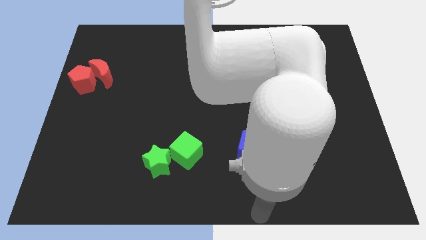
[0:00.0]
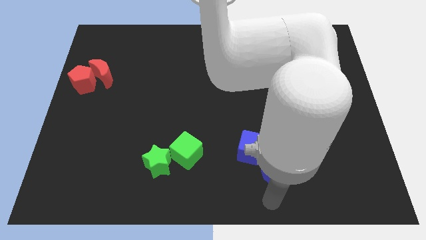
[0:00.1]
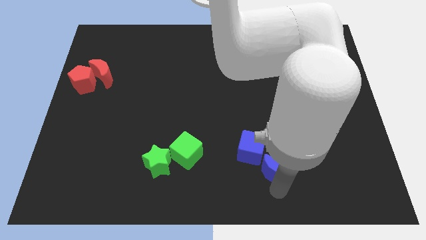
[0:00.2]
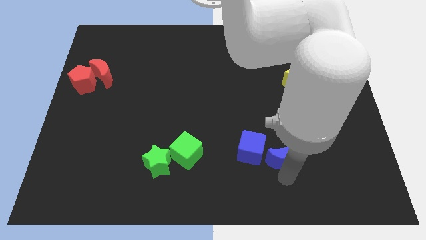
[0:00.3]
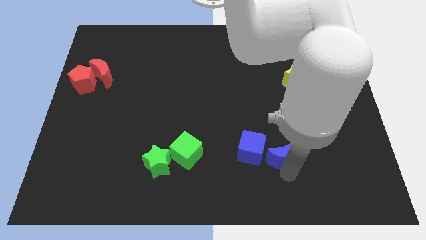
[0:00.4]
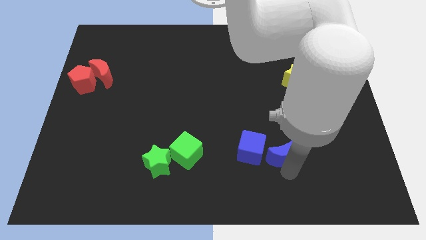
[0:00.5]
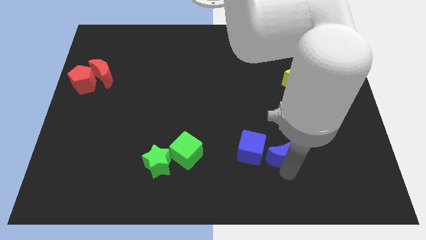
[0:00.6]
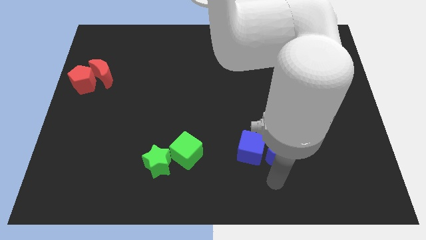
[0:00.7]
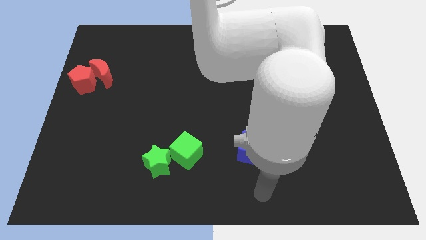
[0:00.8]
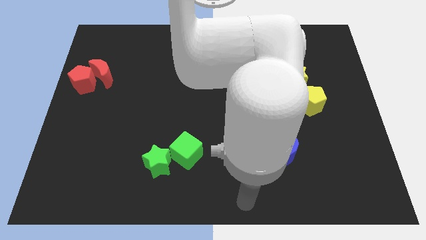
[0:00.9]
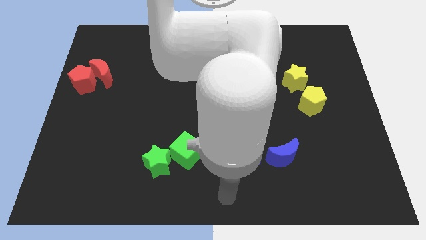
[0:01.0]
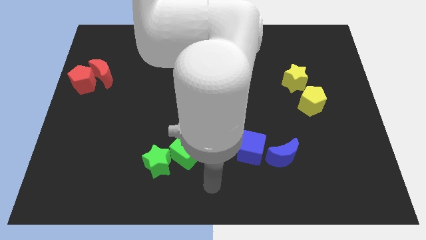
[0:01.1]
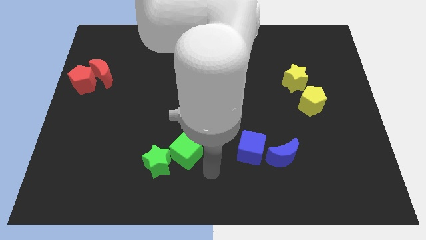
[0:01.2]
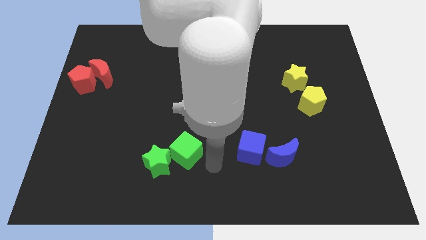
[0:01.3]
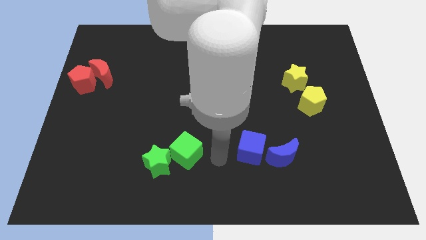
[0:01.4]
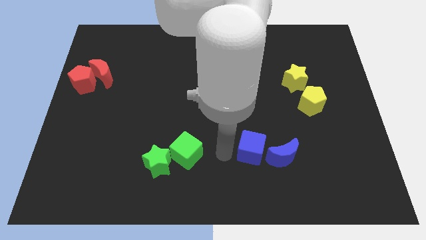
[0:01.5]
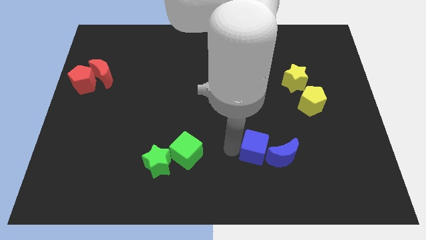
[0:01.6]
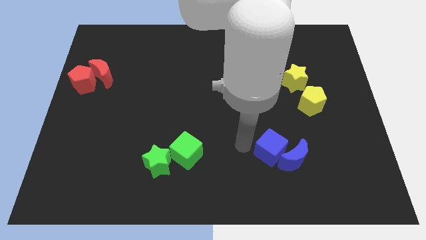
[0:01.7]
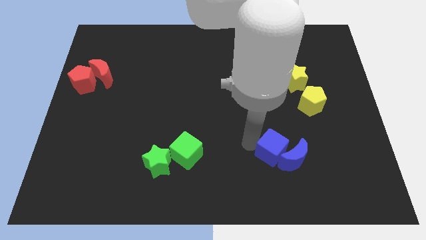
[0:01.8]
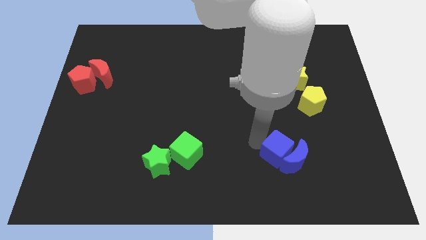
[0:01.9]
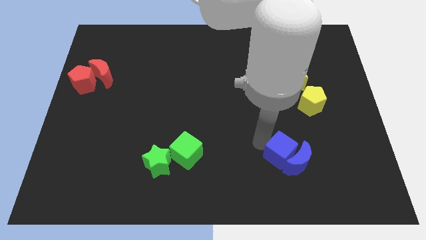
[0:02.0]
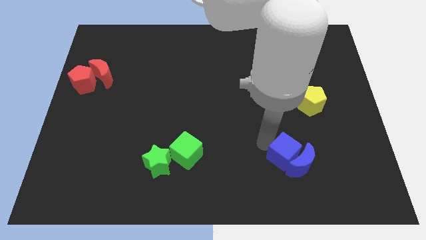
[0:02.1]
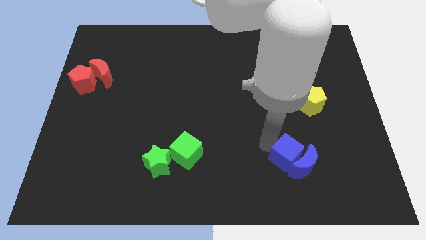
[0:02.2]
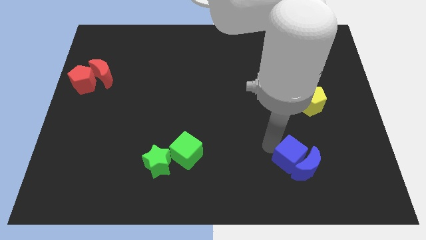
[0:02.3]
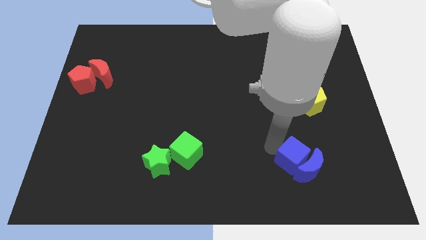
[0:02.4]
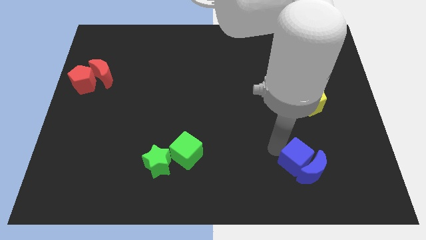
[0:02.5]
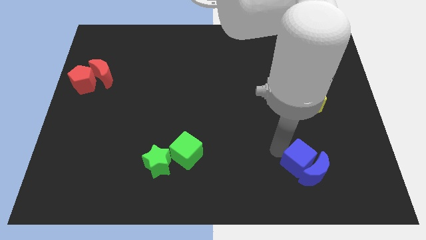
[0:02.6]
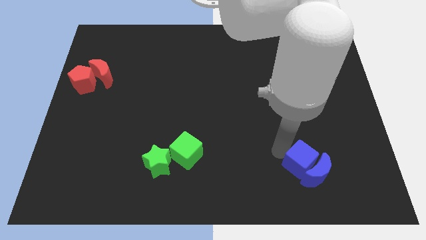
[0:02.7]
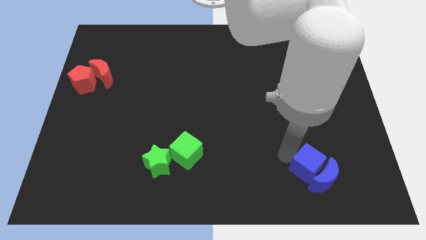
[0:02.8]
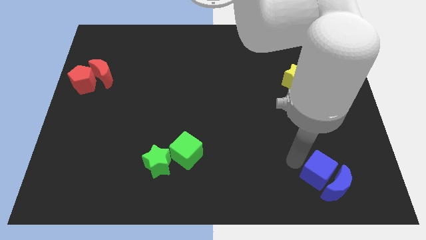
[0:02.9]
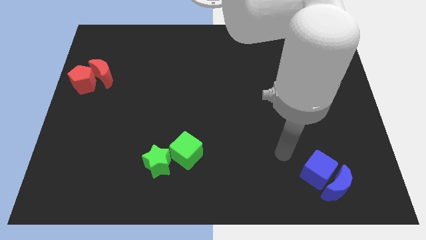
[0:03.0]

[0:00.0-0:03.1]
move the blue blocks towards the bottom right corner of the board

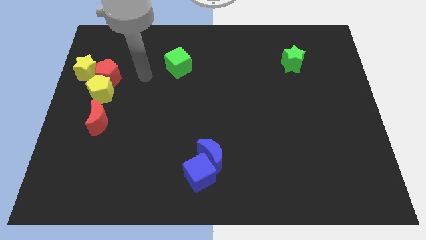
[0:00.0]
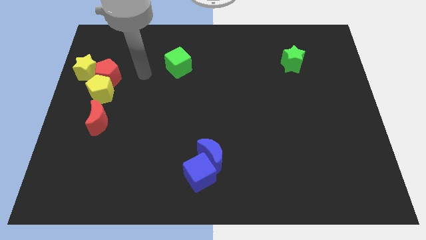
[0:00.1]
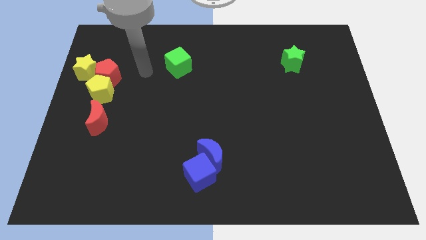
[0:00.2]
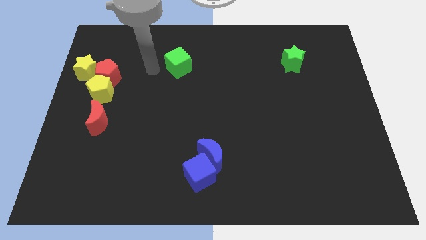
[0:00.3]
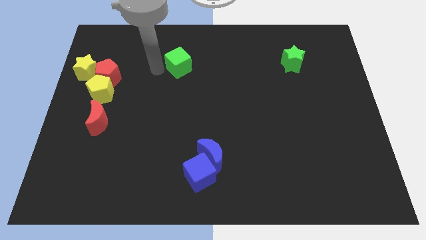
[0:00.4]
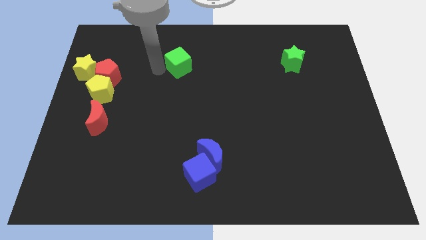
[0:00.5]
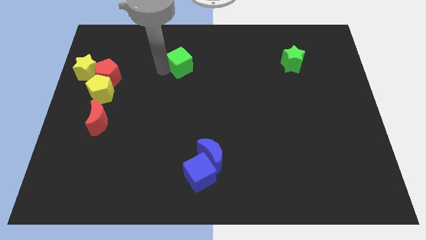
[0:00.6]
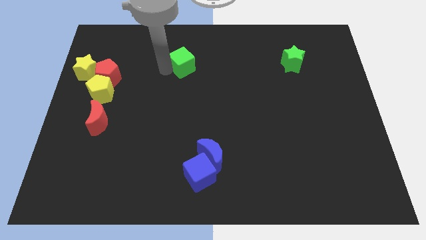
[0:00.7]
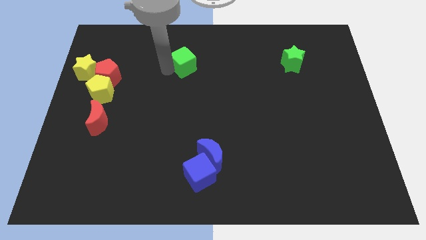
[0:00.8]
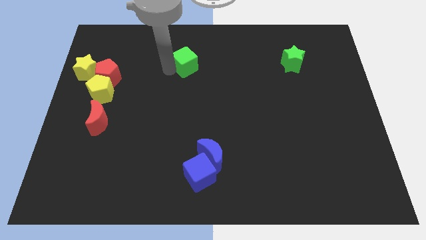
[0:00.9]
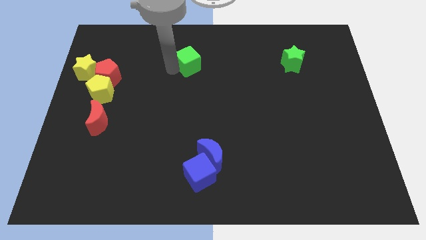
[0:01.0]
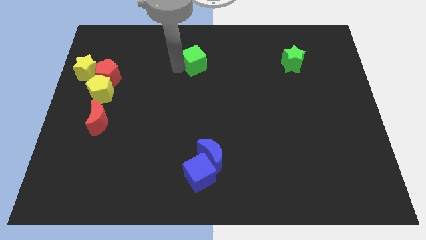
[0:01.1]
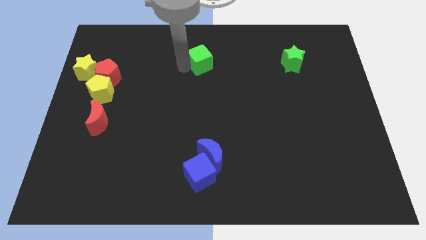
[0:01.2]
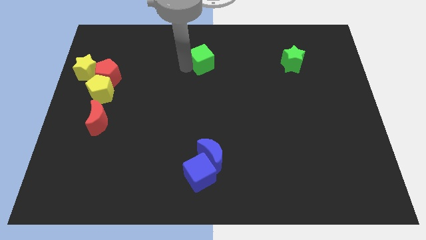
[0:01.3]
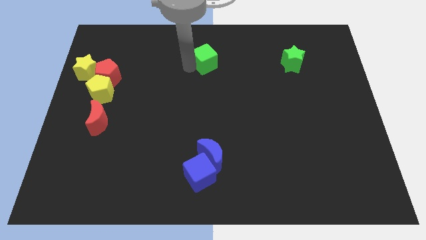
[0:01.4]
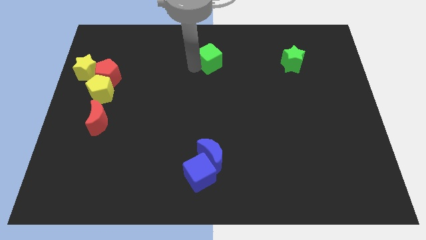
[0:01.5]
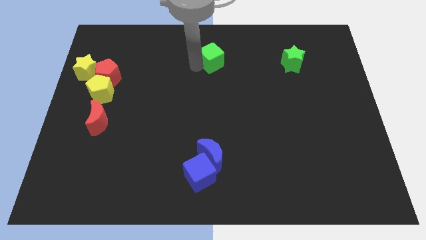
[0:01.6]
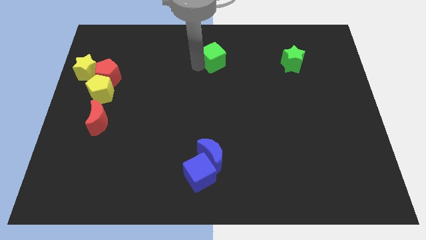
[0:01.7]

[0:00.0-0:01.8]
push the green cube at the top center of the board

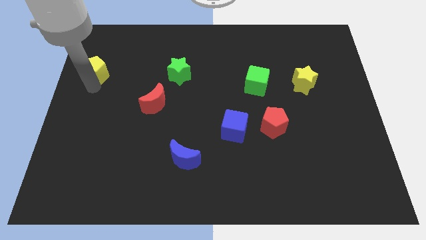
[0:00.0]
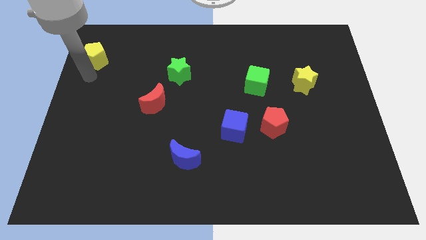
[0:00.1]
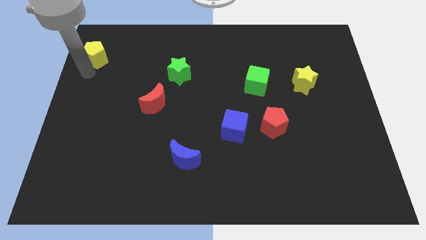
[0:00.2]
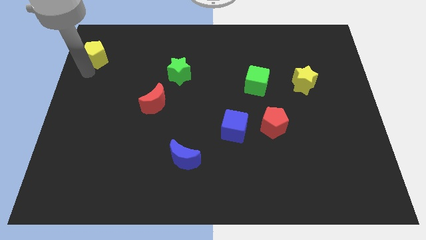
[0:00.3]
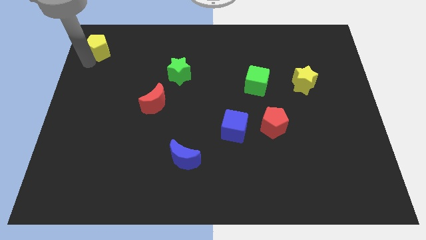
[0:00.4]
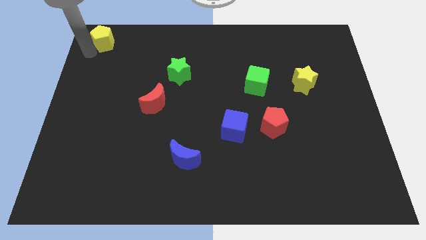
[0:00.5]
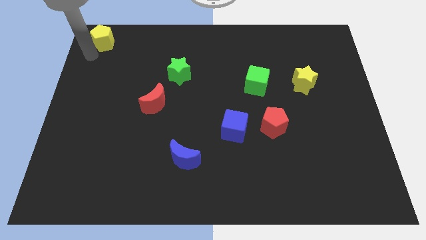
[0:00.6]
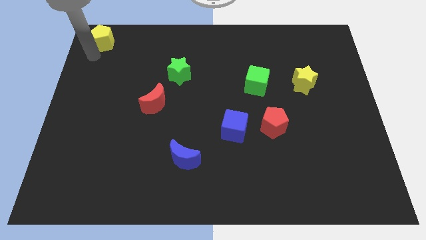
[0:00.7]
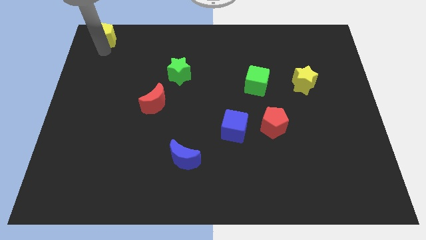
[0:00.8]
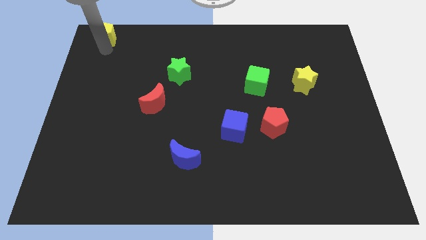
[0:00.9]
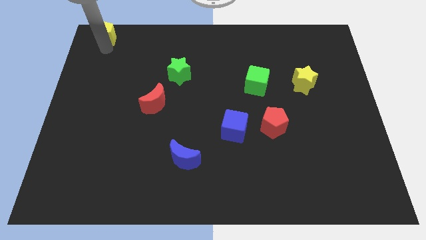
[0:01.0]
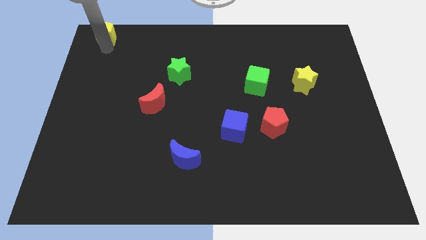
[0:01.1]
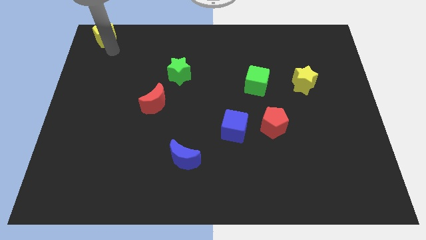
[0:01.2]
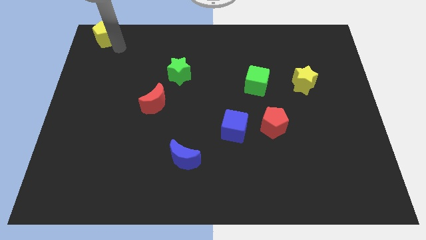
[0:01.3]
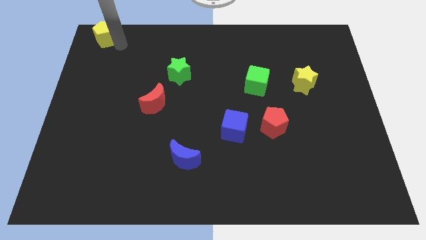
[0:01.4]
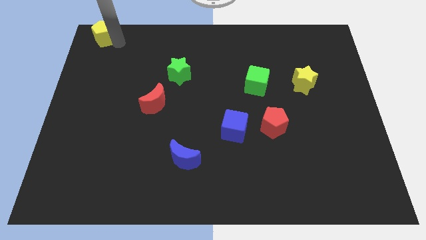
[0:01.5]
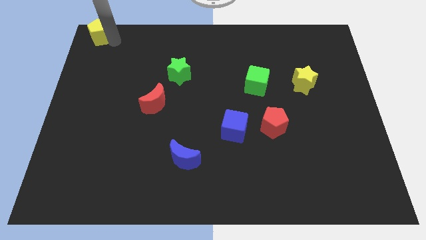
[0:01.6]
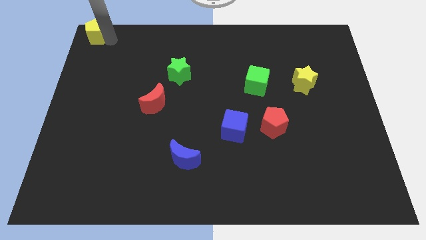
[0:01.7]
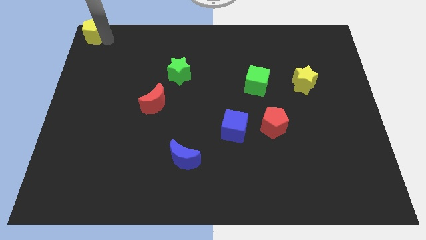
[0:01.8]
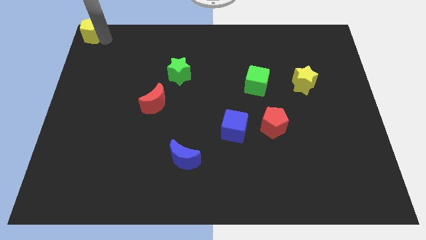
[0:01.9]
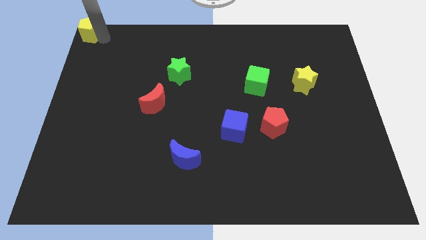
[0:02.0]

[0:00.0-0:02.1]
push the yellow pentagon to the top left corner of the board

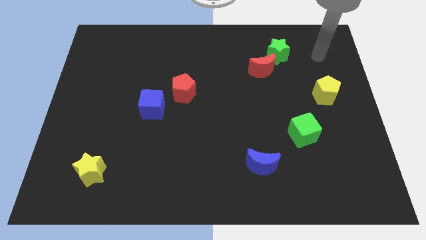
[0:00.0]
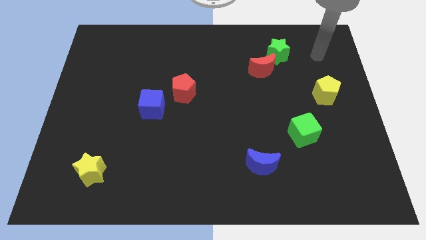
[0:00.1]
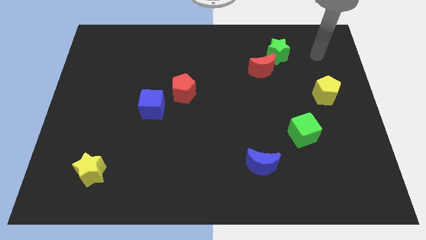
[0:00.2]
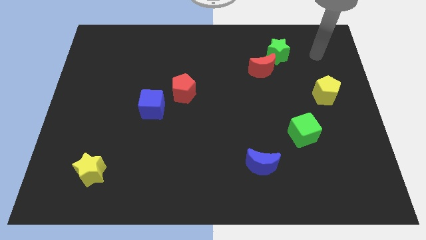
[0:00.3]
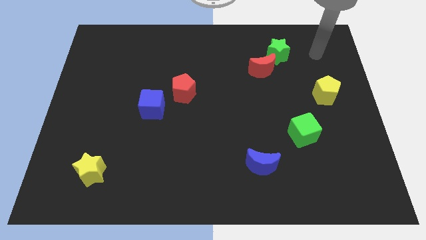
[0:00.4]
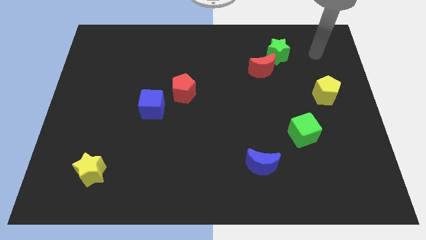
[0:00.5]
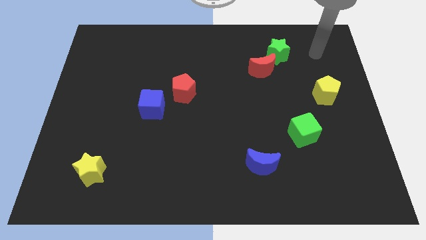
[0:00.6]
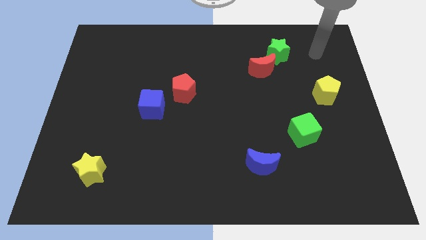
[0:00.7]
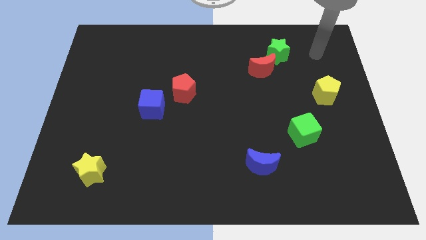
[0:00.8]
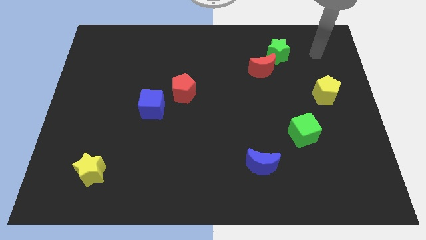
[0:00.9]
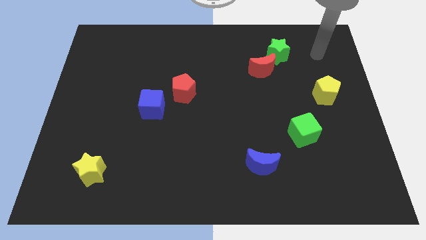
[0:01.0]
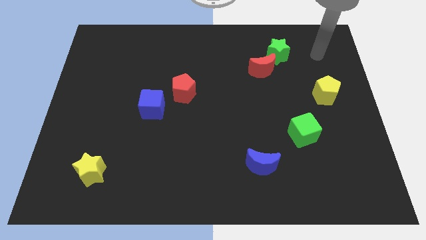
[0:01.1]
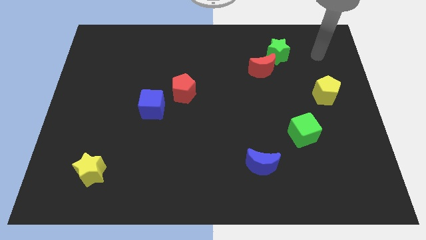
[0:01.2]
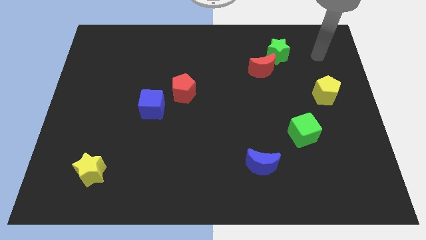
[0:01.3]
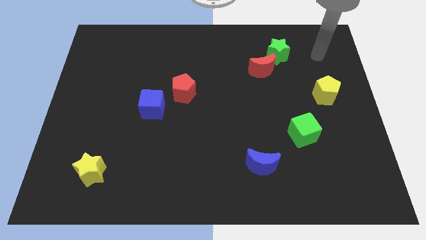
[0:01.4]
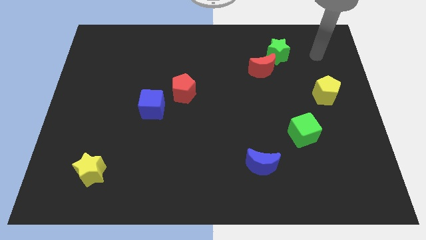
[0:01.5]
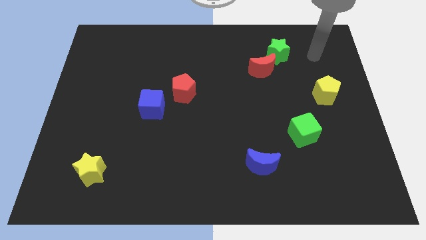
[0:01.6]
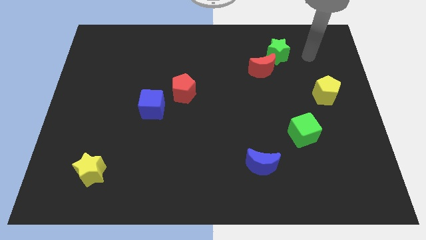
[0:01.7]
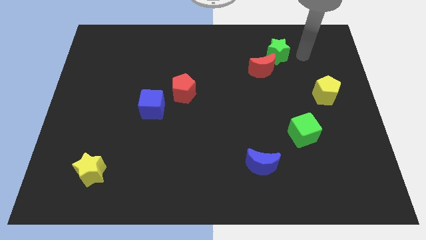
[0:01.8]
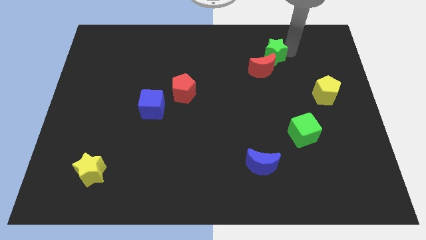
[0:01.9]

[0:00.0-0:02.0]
move arm near green star

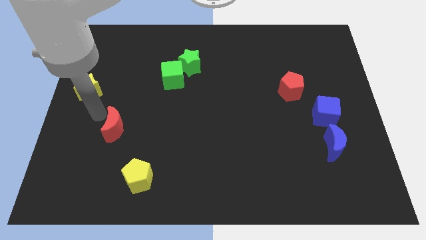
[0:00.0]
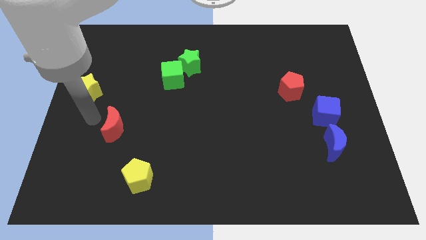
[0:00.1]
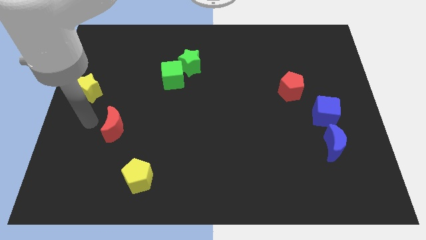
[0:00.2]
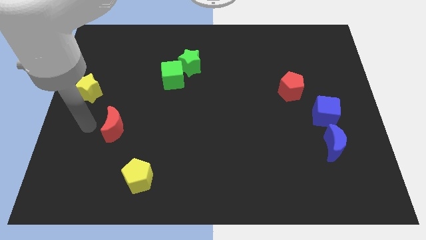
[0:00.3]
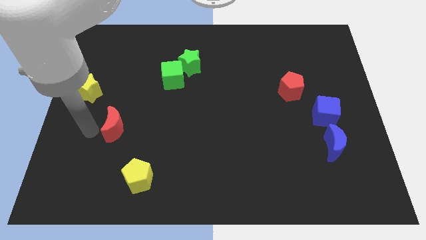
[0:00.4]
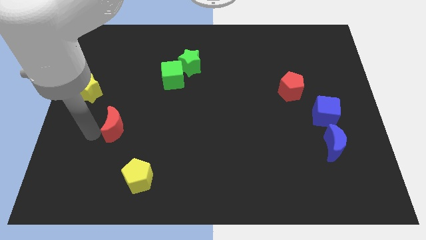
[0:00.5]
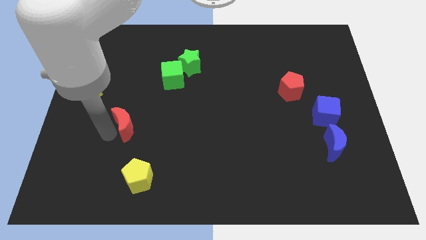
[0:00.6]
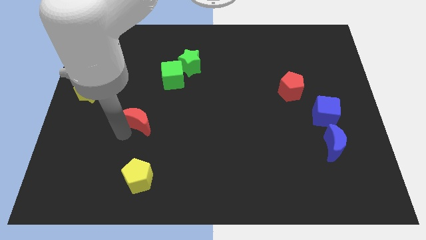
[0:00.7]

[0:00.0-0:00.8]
push the red crescent to the top of the yellow pentagon
